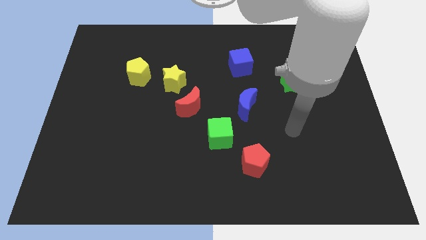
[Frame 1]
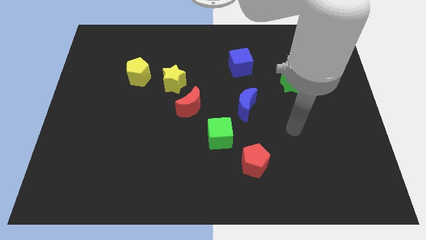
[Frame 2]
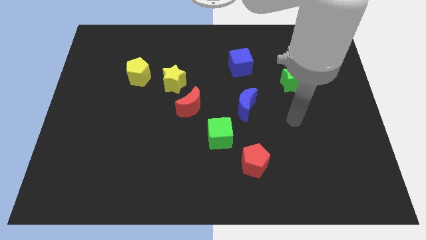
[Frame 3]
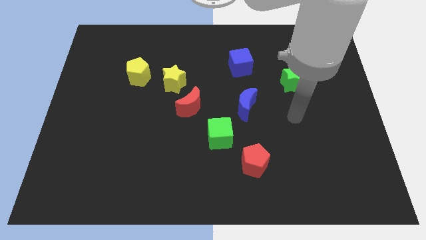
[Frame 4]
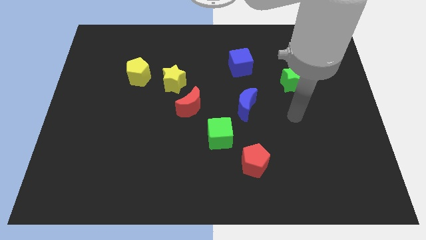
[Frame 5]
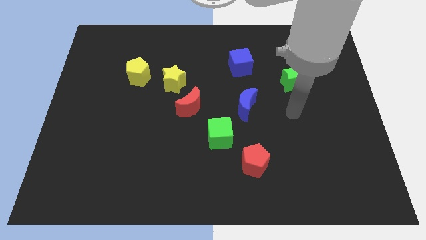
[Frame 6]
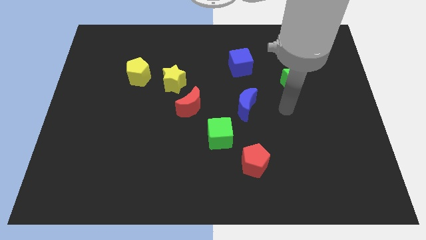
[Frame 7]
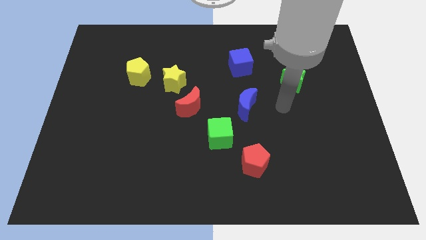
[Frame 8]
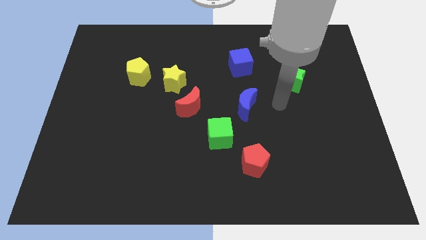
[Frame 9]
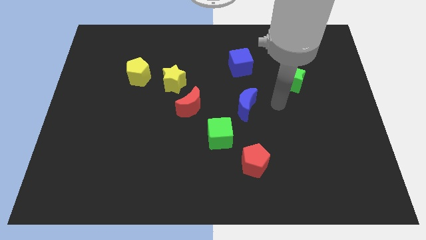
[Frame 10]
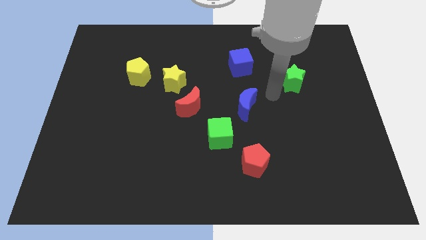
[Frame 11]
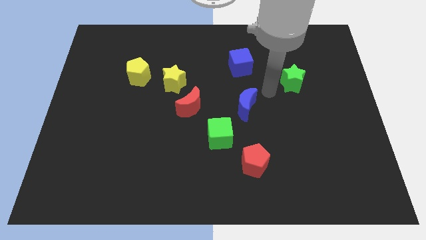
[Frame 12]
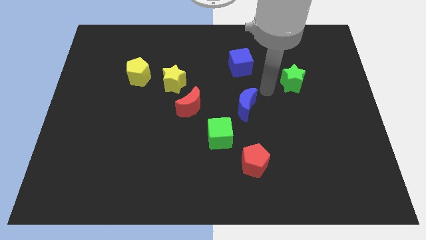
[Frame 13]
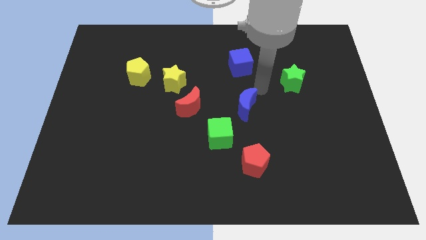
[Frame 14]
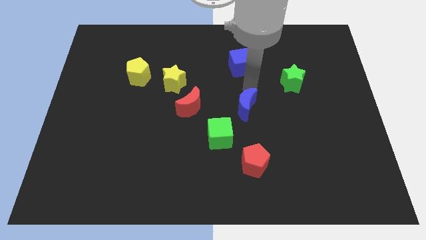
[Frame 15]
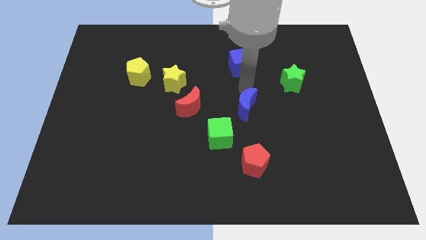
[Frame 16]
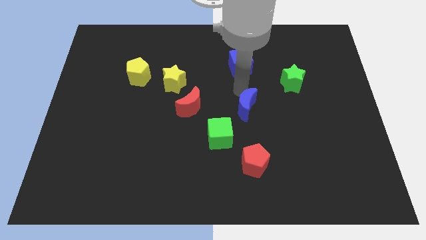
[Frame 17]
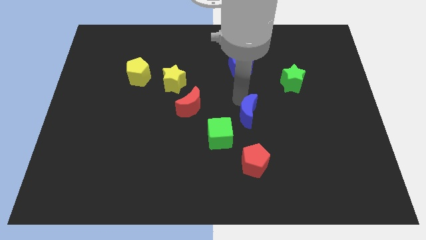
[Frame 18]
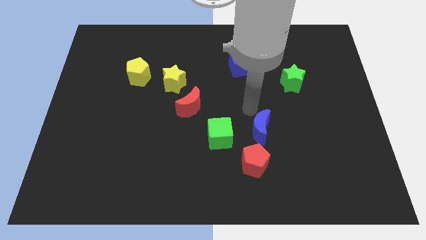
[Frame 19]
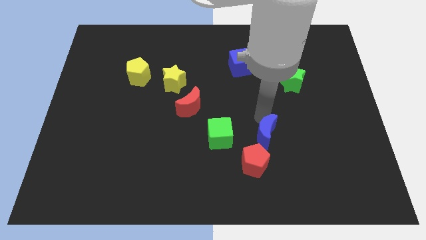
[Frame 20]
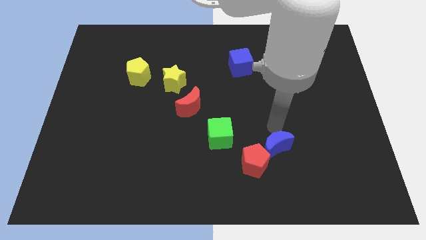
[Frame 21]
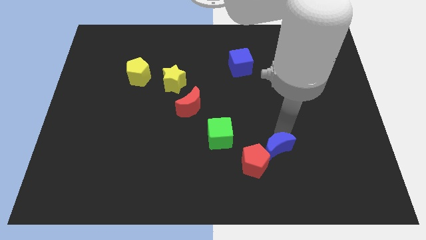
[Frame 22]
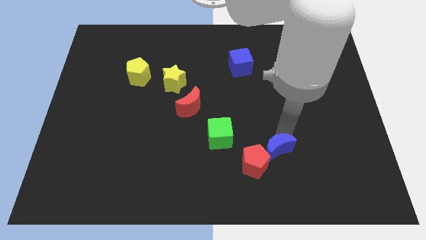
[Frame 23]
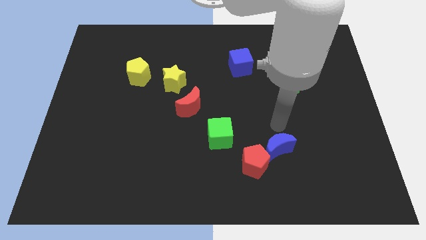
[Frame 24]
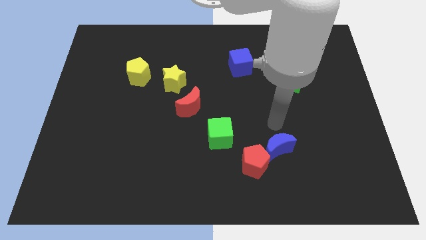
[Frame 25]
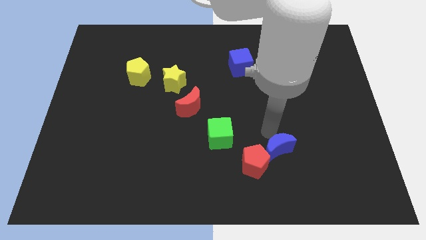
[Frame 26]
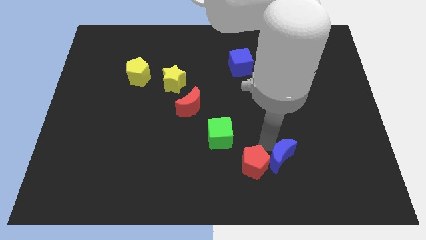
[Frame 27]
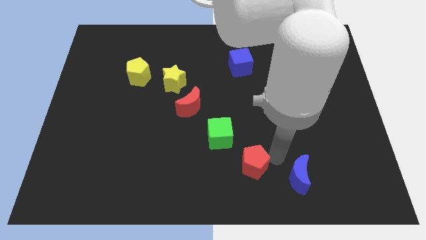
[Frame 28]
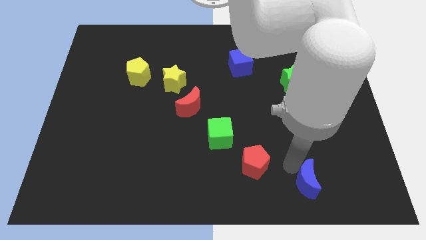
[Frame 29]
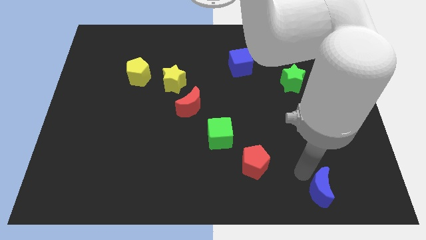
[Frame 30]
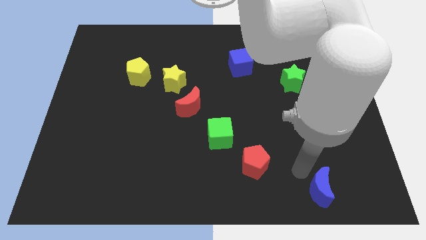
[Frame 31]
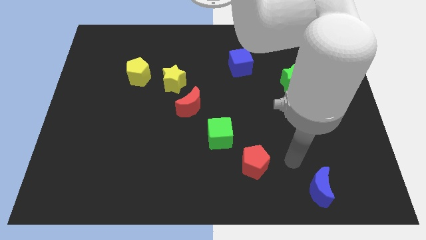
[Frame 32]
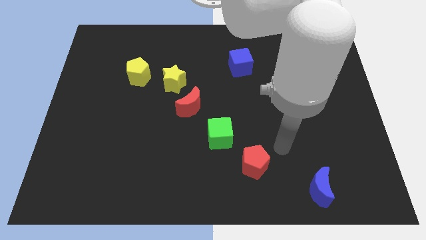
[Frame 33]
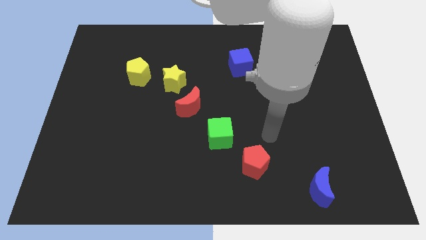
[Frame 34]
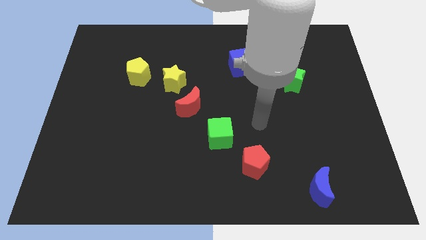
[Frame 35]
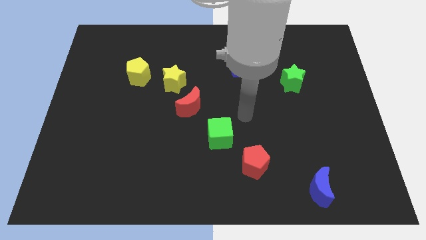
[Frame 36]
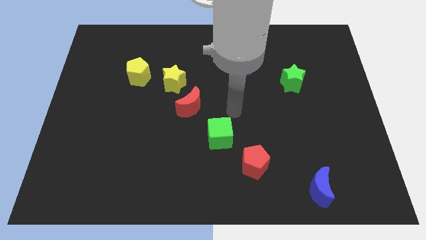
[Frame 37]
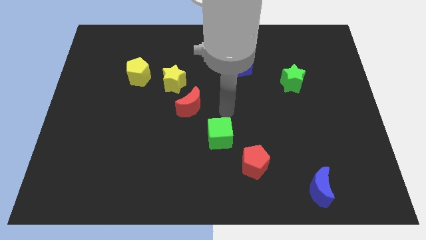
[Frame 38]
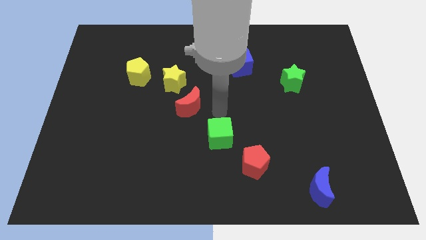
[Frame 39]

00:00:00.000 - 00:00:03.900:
place the blue moon at the bottom right side

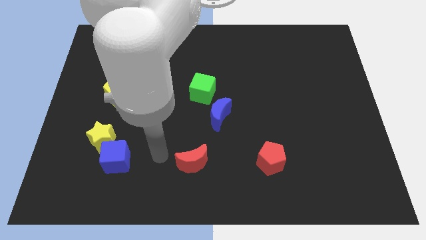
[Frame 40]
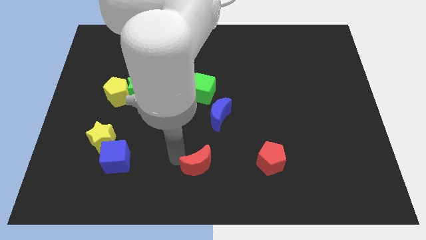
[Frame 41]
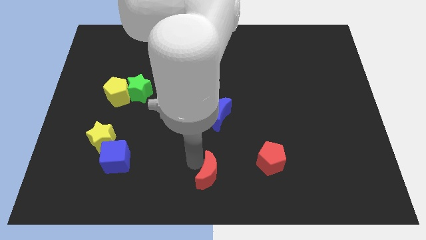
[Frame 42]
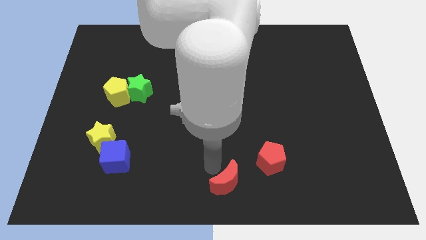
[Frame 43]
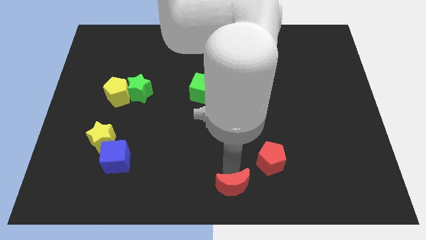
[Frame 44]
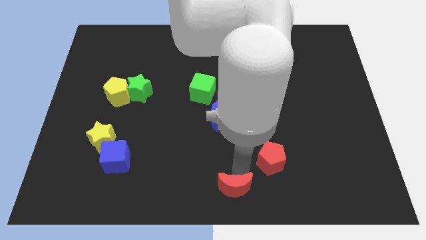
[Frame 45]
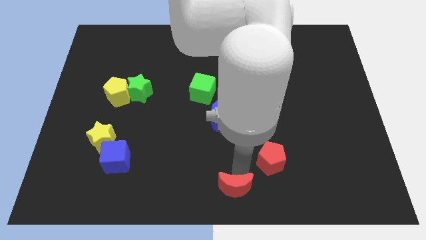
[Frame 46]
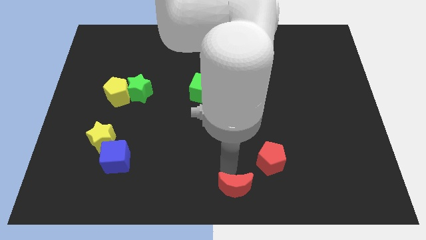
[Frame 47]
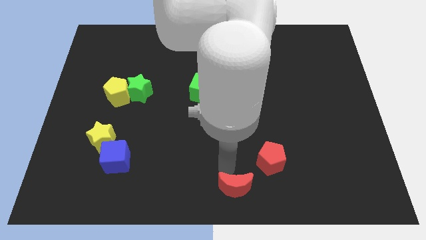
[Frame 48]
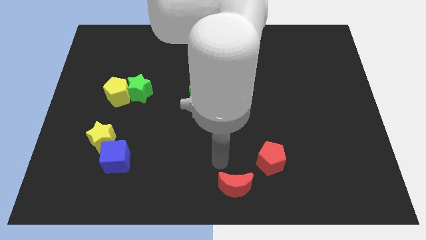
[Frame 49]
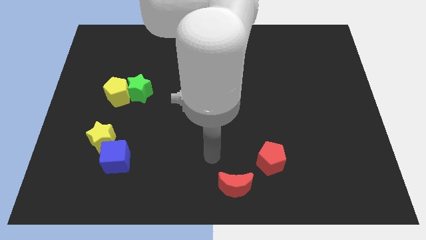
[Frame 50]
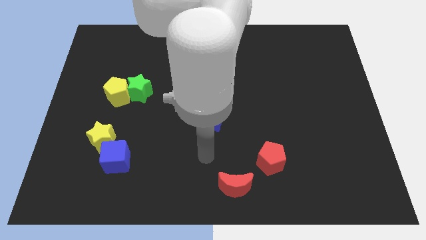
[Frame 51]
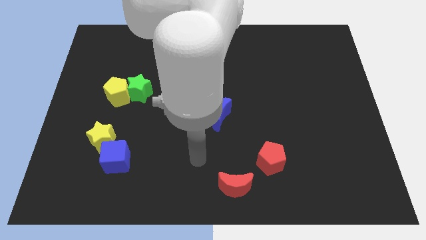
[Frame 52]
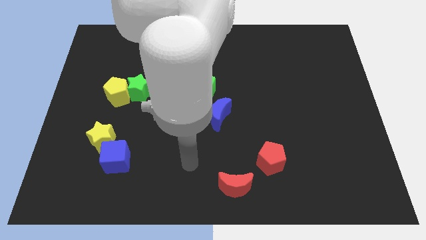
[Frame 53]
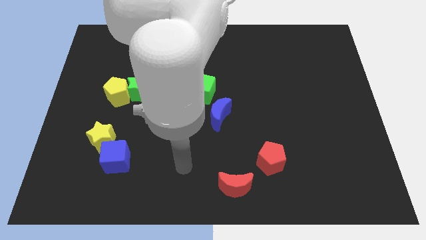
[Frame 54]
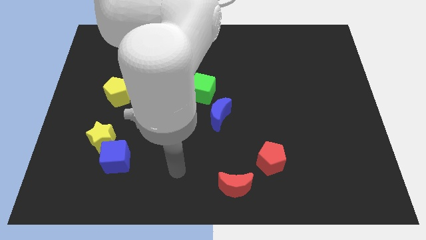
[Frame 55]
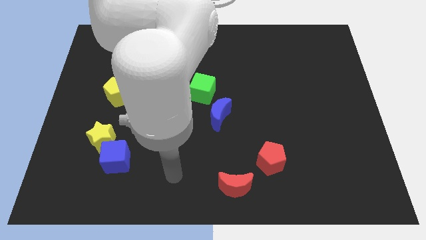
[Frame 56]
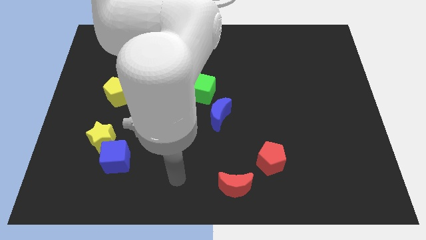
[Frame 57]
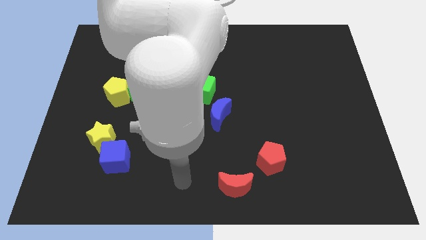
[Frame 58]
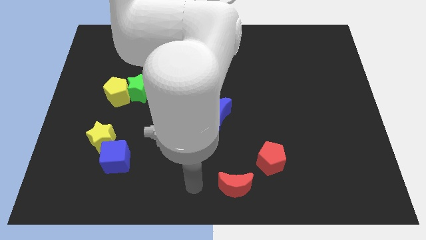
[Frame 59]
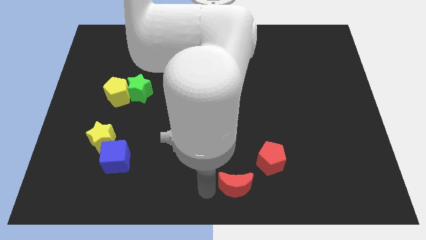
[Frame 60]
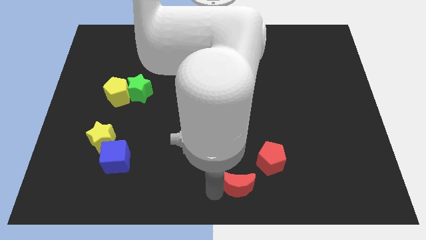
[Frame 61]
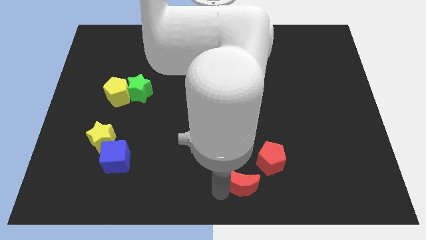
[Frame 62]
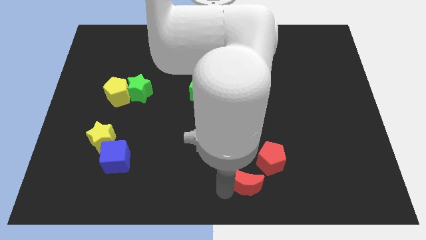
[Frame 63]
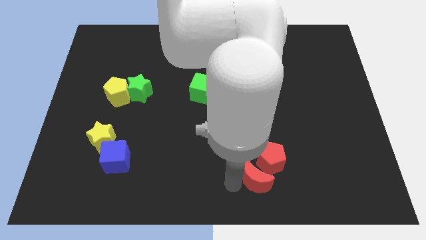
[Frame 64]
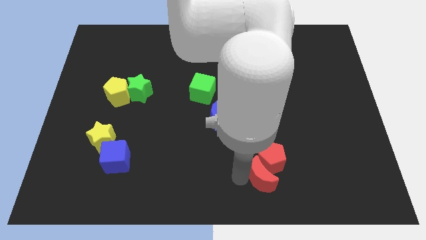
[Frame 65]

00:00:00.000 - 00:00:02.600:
place red crescent below red pentagon

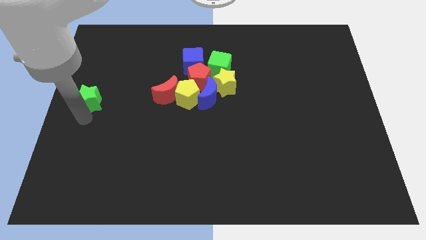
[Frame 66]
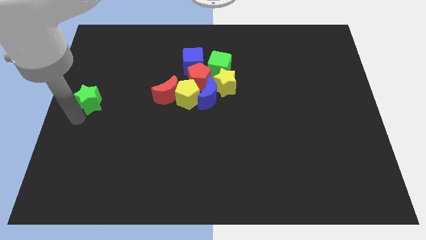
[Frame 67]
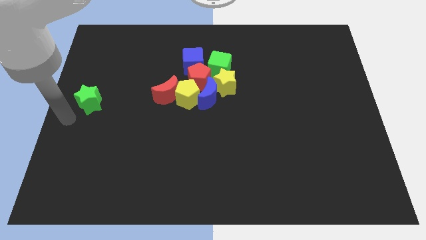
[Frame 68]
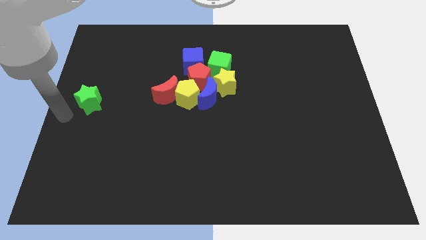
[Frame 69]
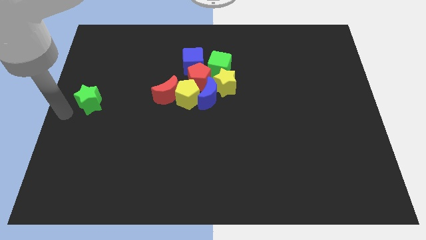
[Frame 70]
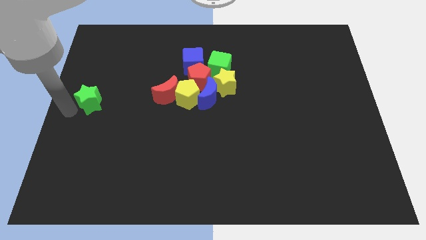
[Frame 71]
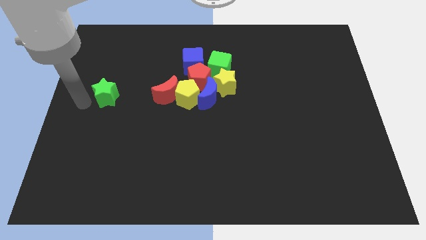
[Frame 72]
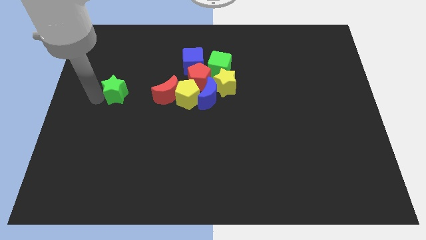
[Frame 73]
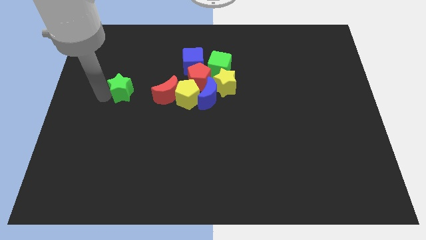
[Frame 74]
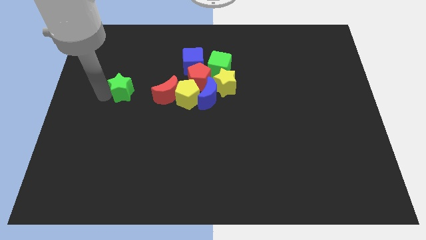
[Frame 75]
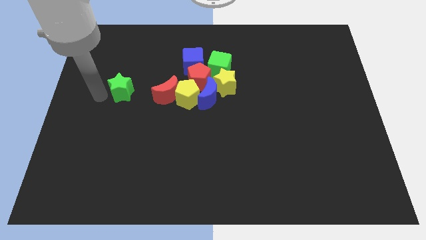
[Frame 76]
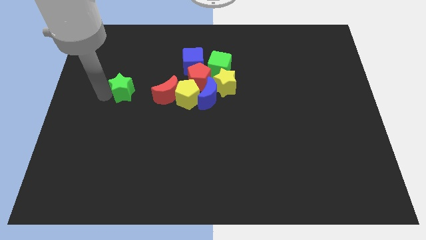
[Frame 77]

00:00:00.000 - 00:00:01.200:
move the green star diagonal to the left of the red pentagon

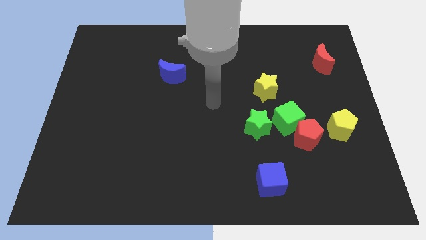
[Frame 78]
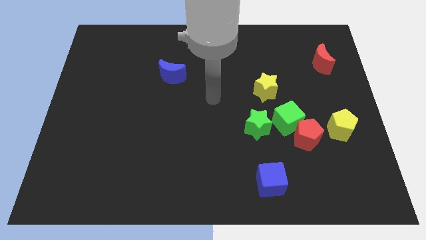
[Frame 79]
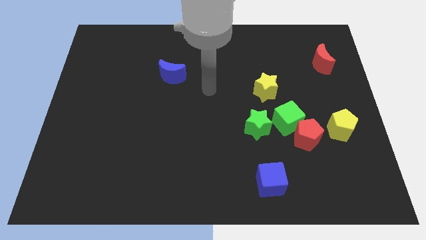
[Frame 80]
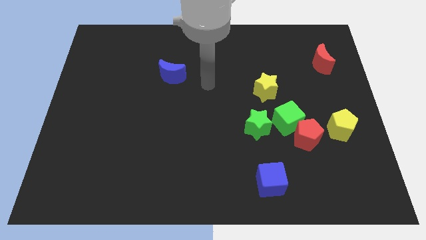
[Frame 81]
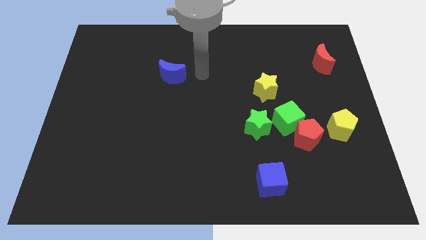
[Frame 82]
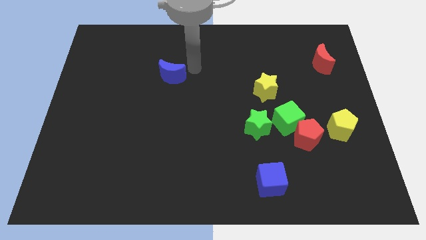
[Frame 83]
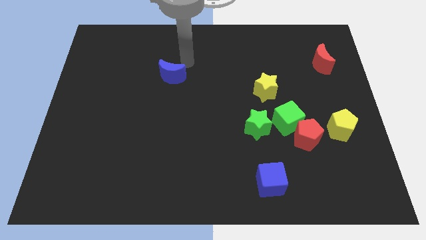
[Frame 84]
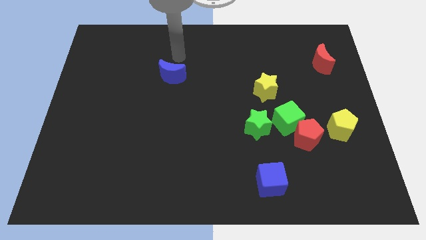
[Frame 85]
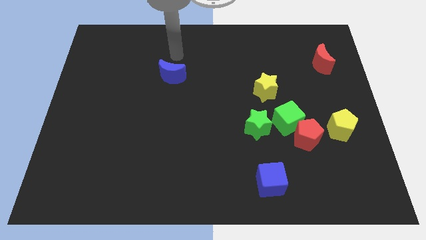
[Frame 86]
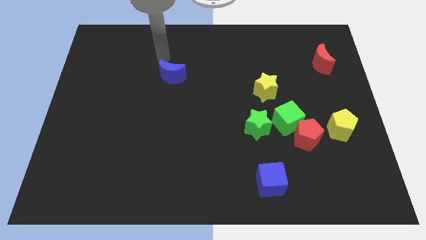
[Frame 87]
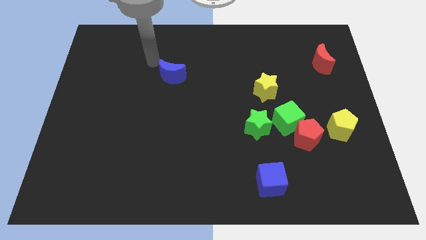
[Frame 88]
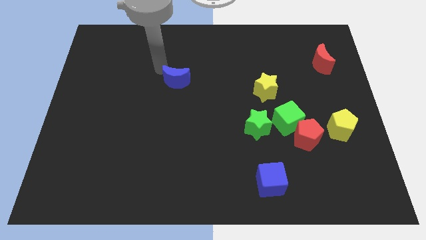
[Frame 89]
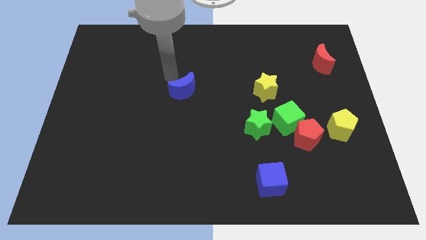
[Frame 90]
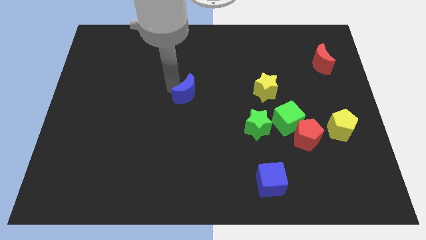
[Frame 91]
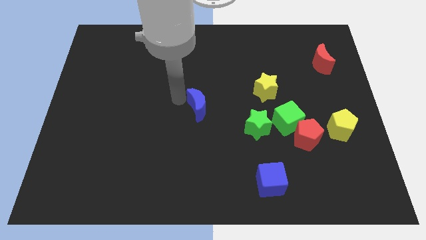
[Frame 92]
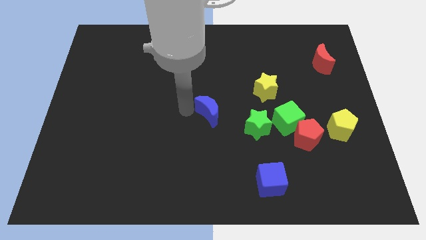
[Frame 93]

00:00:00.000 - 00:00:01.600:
place the blue crescent at the center of the board
